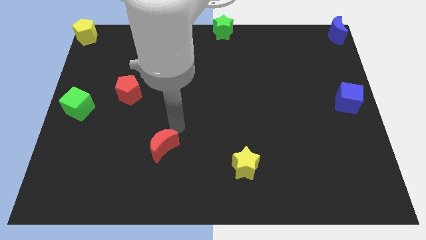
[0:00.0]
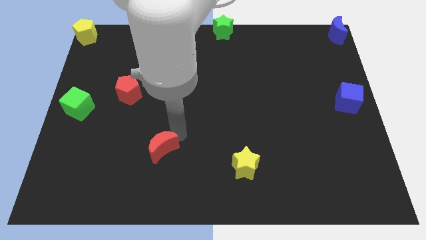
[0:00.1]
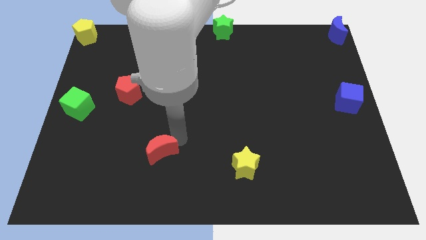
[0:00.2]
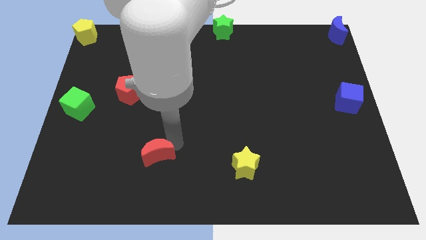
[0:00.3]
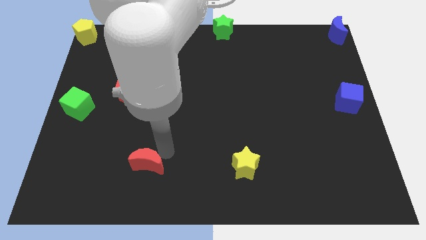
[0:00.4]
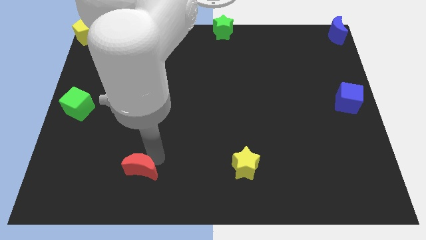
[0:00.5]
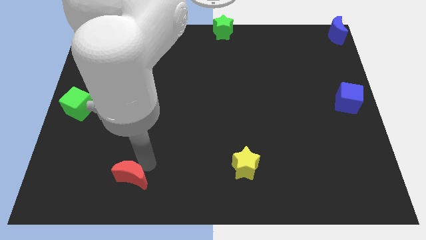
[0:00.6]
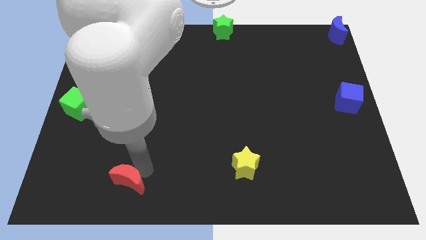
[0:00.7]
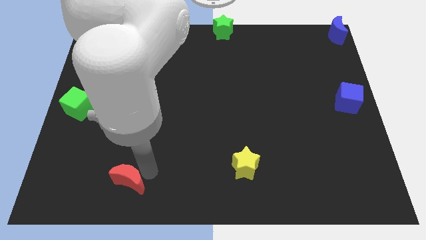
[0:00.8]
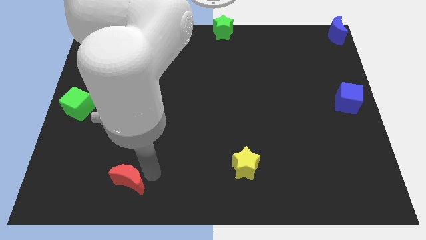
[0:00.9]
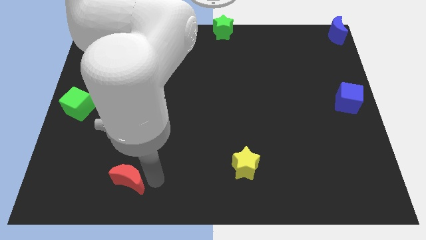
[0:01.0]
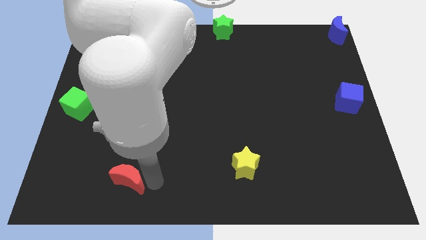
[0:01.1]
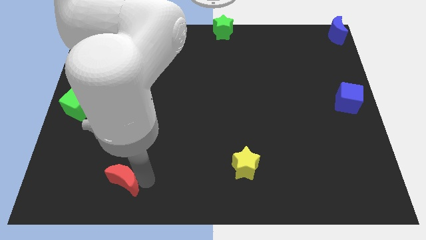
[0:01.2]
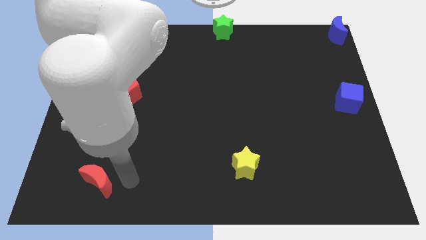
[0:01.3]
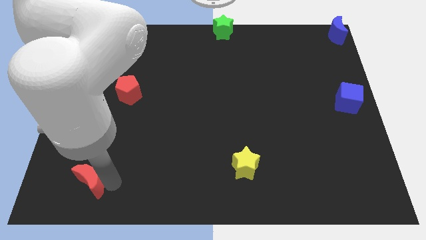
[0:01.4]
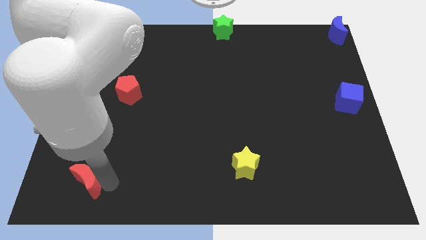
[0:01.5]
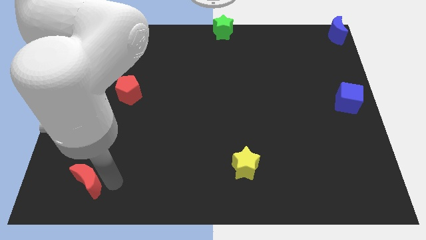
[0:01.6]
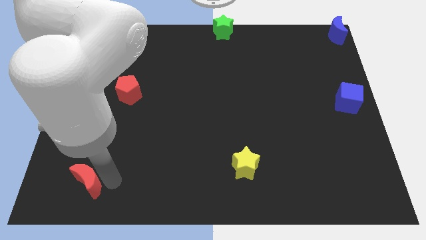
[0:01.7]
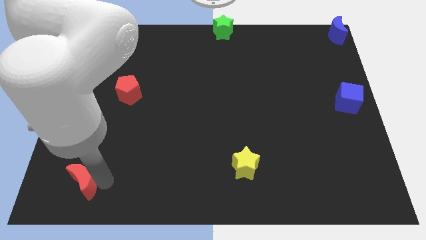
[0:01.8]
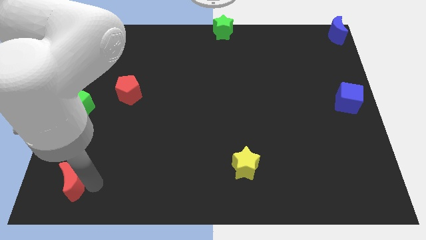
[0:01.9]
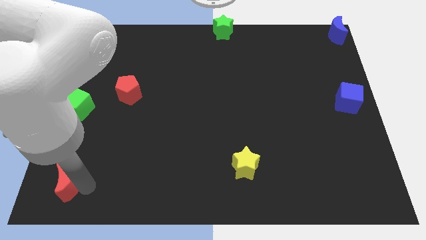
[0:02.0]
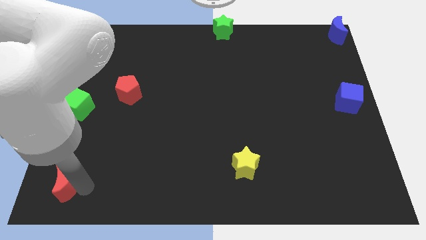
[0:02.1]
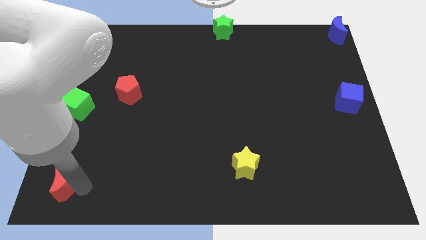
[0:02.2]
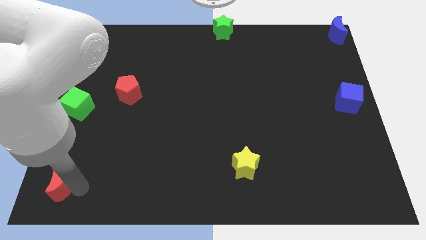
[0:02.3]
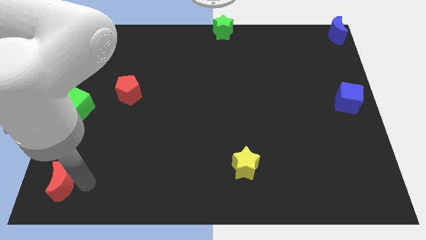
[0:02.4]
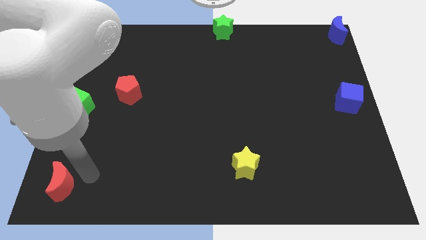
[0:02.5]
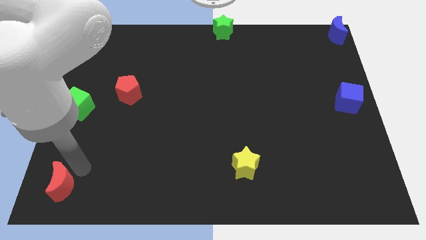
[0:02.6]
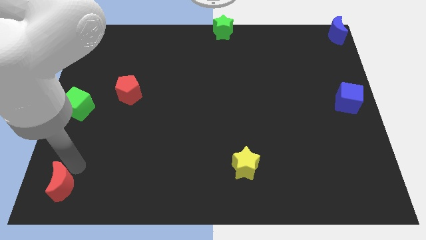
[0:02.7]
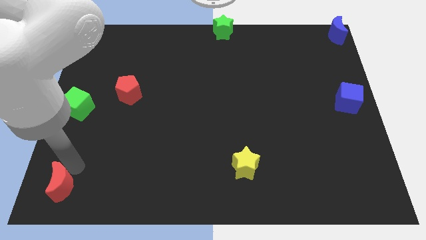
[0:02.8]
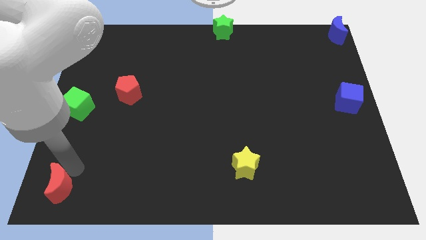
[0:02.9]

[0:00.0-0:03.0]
drag red moon towards bottom left side of the board

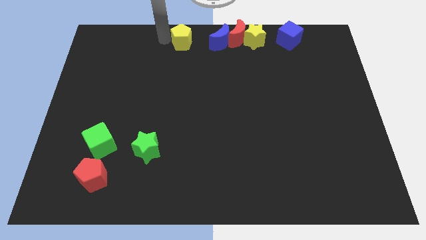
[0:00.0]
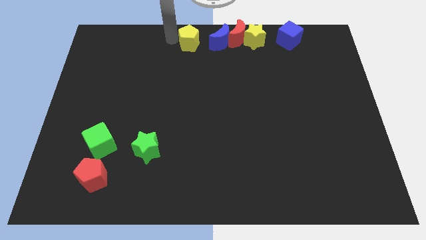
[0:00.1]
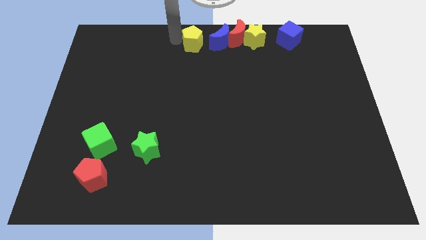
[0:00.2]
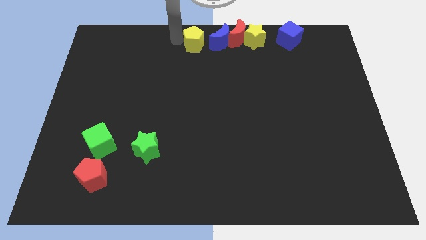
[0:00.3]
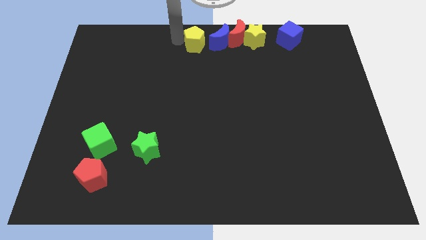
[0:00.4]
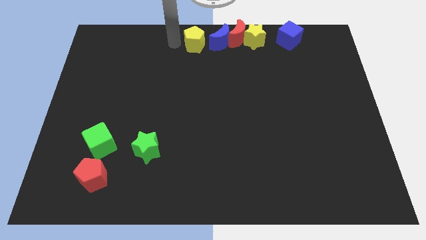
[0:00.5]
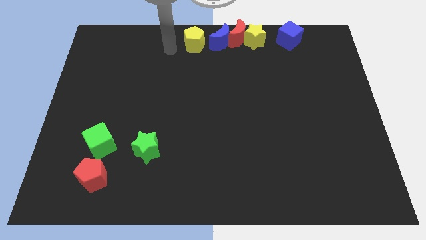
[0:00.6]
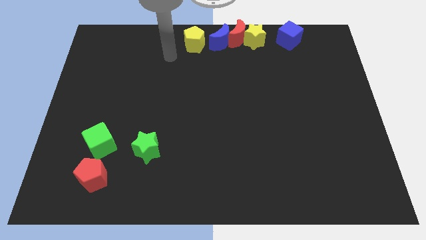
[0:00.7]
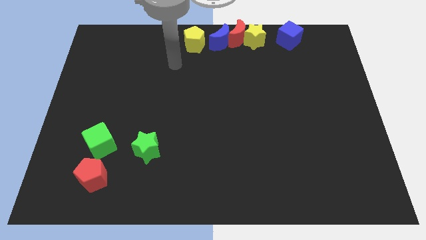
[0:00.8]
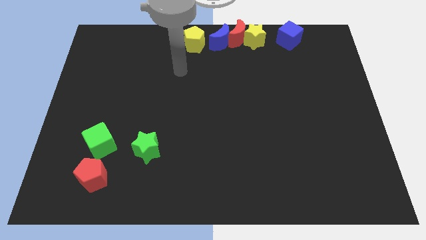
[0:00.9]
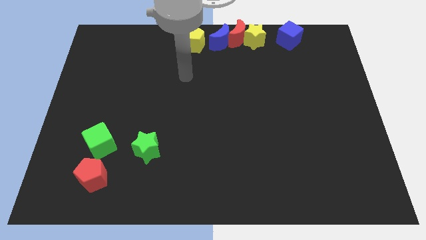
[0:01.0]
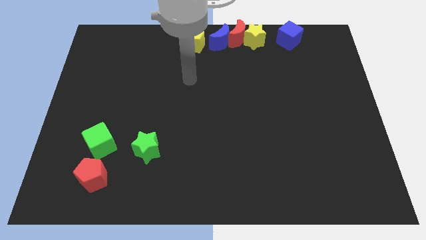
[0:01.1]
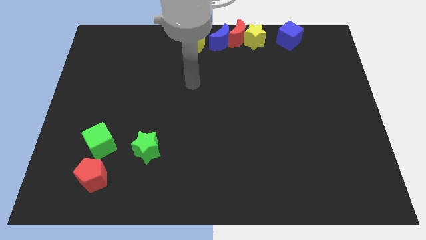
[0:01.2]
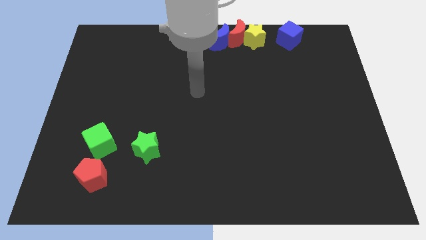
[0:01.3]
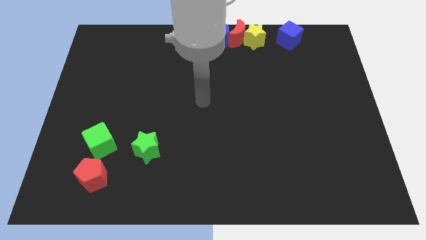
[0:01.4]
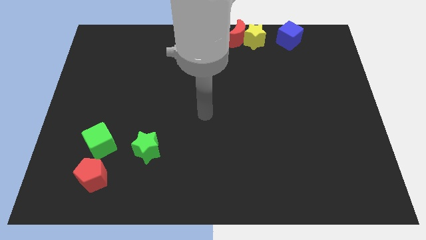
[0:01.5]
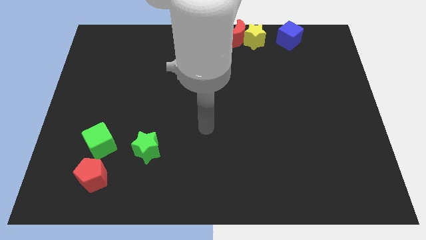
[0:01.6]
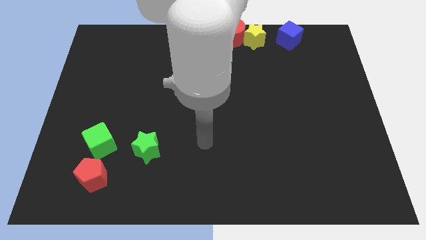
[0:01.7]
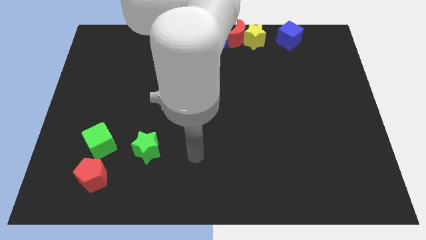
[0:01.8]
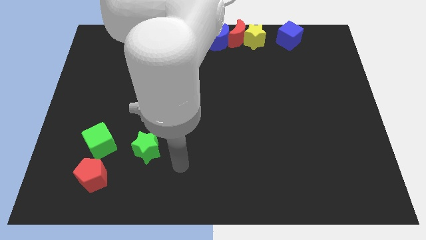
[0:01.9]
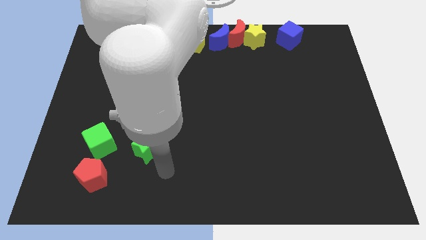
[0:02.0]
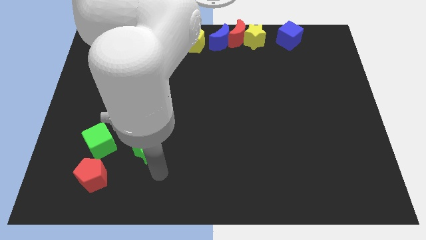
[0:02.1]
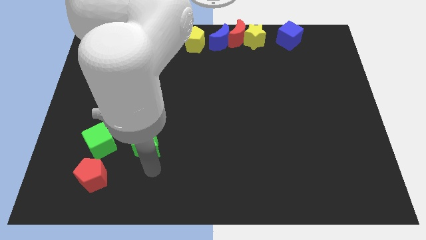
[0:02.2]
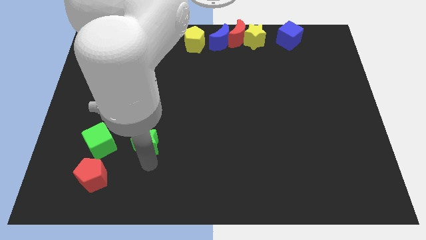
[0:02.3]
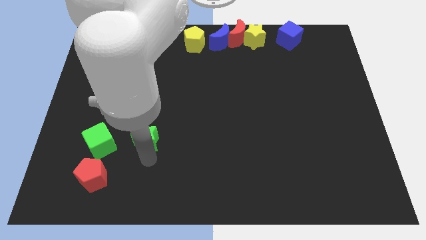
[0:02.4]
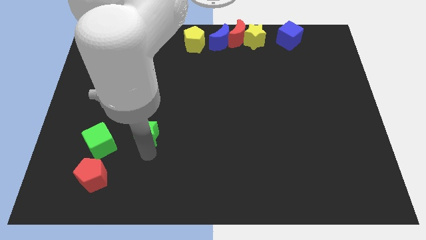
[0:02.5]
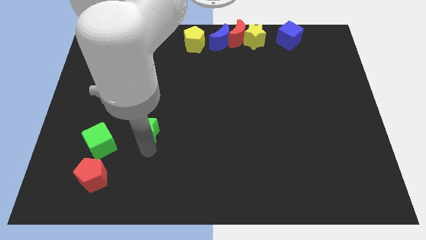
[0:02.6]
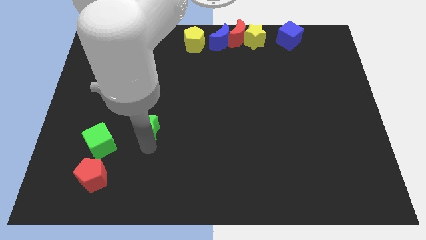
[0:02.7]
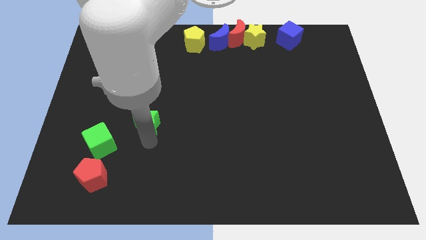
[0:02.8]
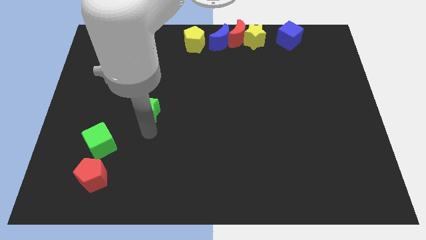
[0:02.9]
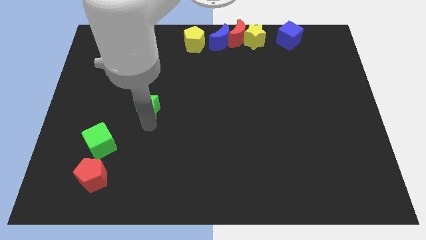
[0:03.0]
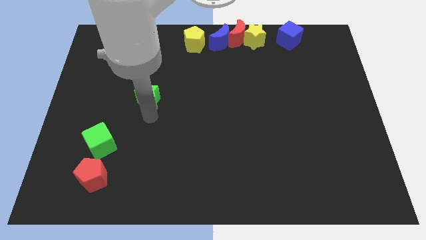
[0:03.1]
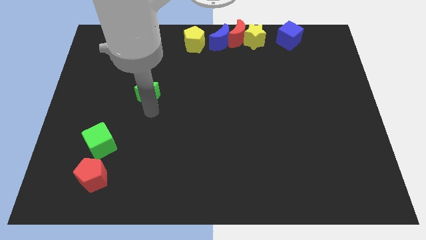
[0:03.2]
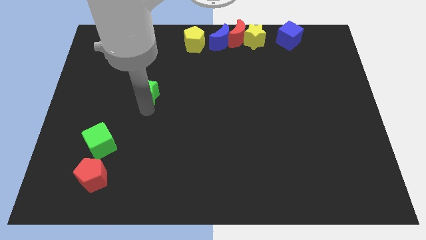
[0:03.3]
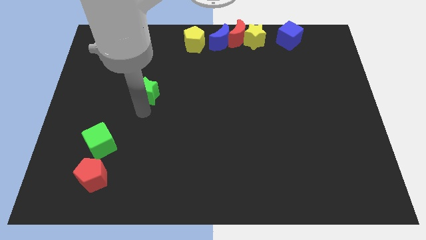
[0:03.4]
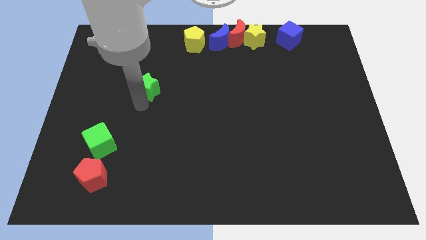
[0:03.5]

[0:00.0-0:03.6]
move the green star slightly up

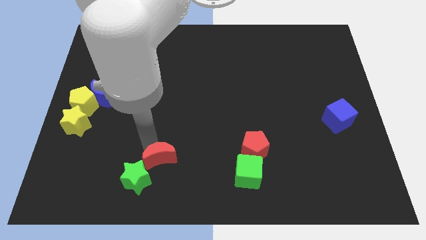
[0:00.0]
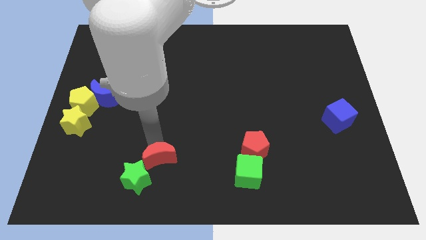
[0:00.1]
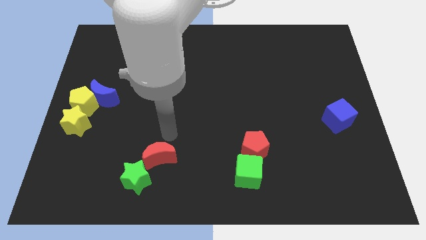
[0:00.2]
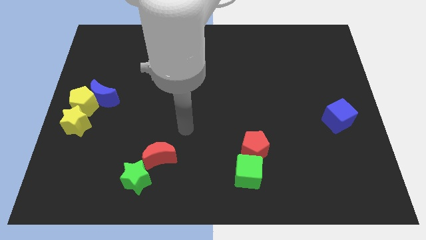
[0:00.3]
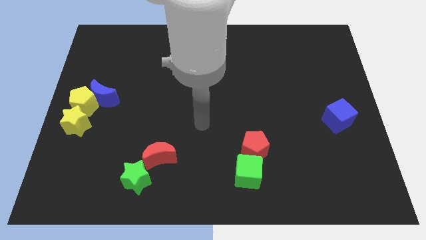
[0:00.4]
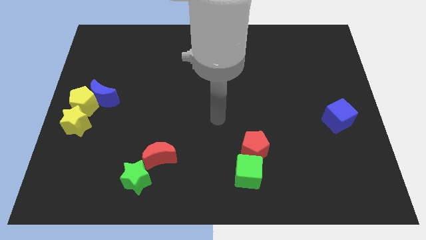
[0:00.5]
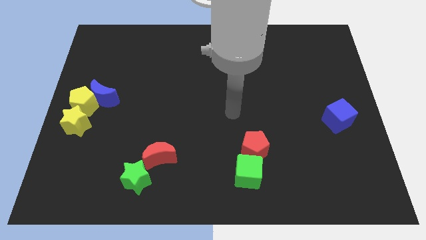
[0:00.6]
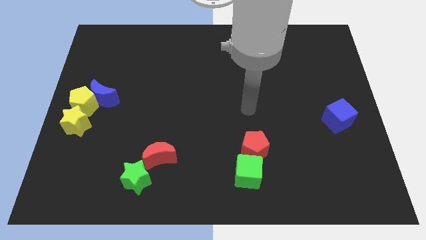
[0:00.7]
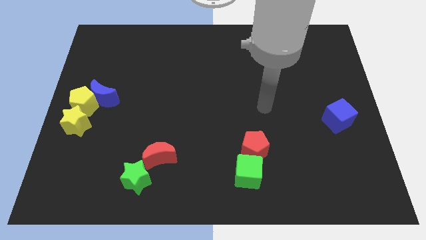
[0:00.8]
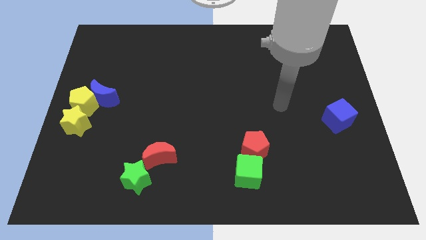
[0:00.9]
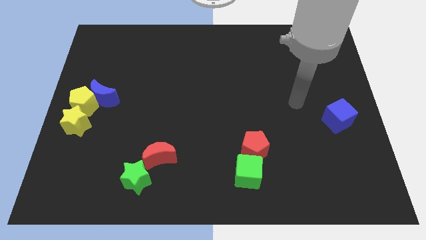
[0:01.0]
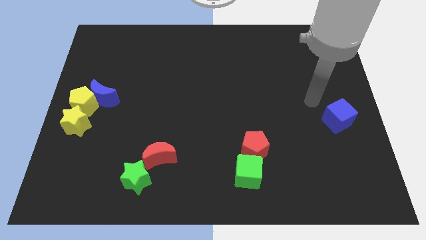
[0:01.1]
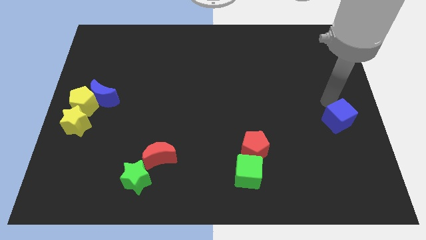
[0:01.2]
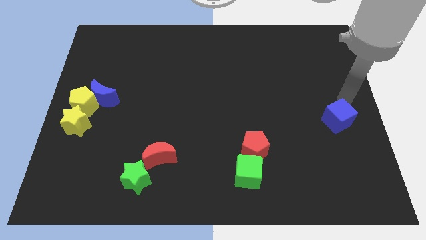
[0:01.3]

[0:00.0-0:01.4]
move your arm to the top side of the blue cube

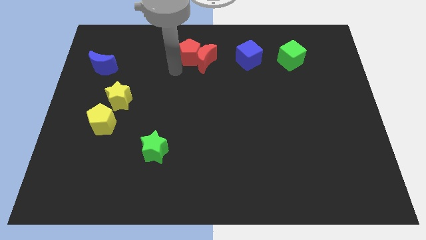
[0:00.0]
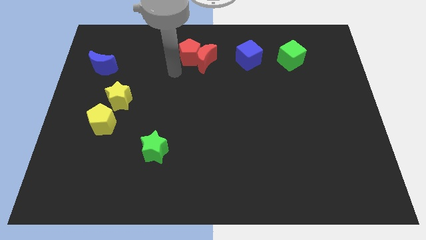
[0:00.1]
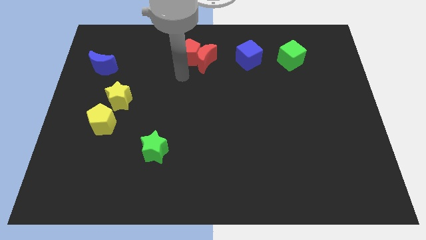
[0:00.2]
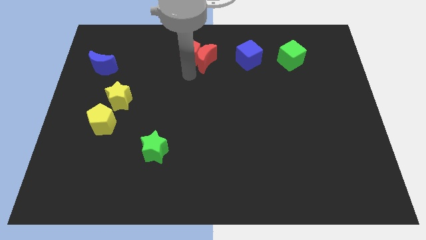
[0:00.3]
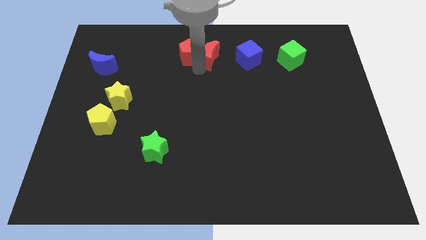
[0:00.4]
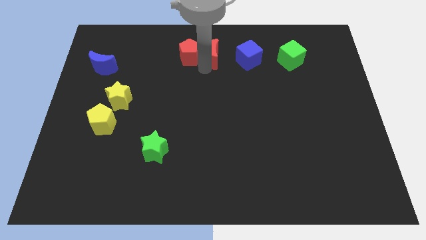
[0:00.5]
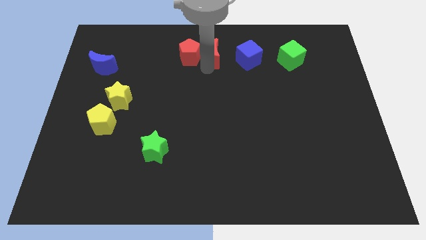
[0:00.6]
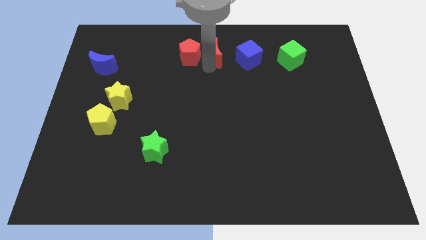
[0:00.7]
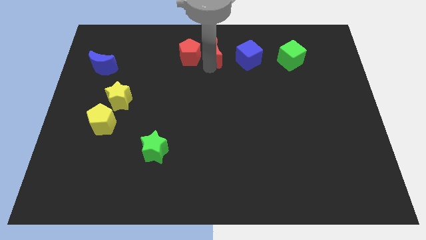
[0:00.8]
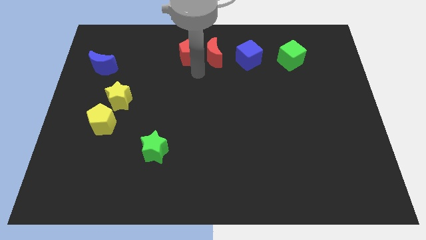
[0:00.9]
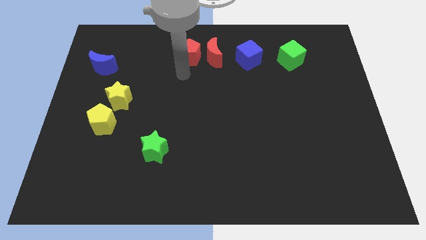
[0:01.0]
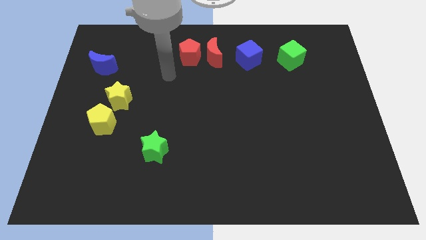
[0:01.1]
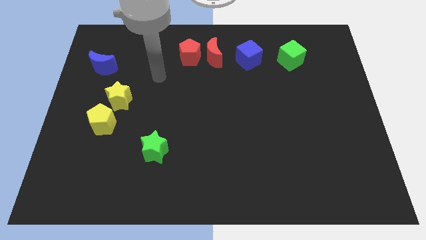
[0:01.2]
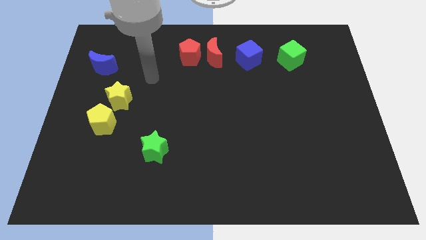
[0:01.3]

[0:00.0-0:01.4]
separate the red crescent from the red pentagon
